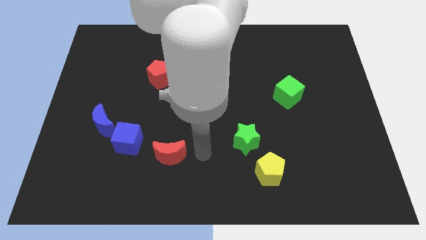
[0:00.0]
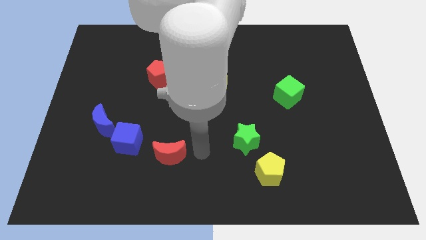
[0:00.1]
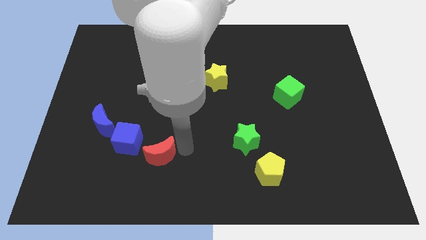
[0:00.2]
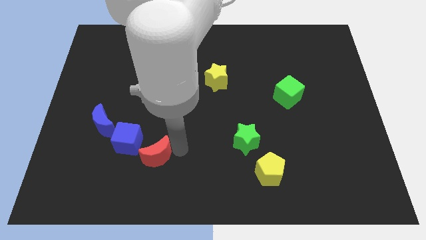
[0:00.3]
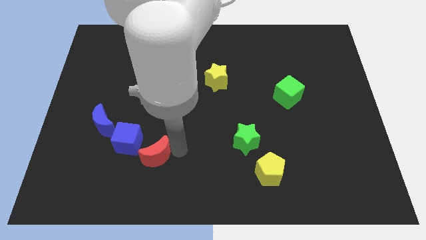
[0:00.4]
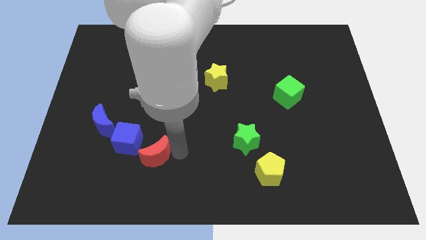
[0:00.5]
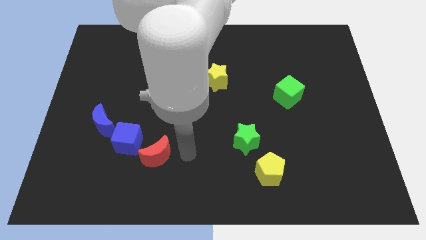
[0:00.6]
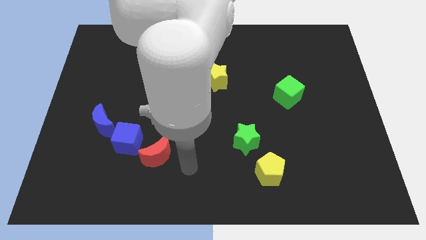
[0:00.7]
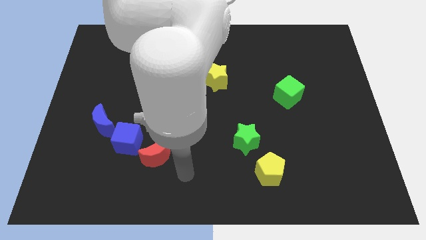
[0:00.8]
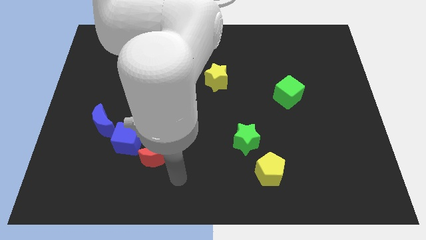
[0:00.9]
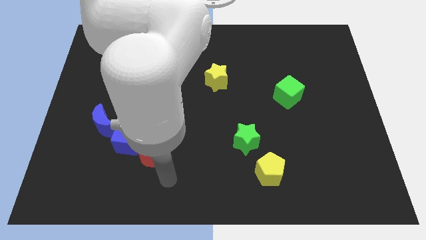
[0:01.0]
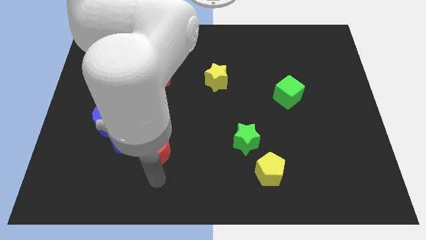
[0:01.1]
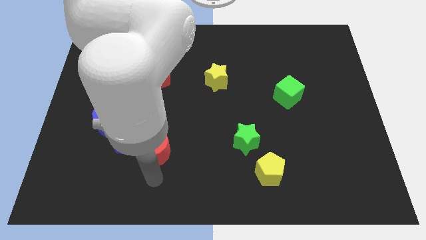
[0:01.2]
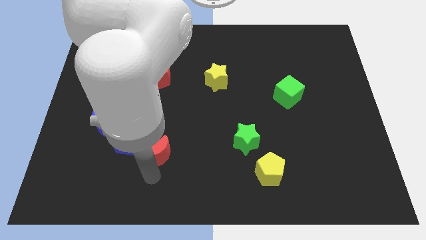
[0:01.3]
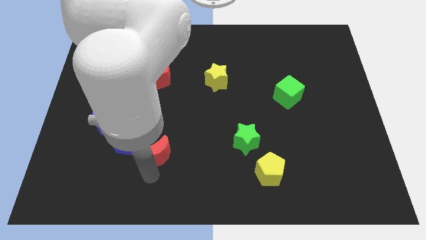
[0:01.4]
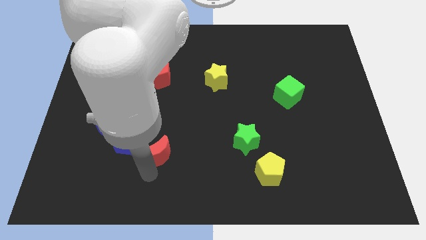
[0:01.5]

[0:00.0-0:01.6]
place the red moon at the bottom right side of blue cube

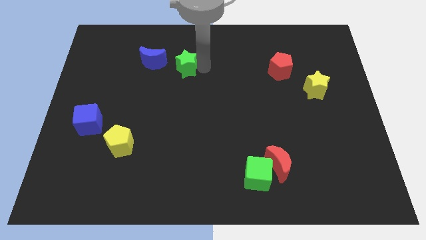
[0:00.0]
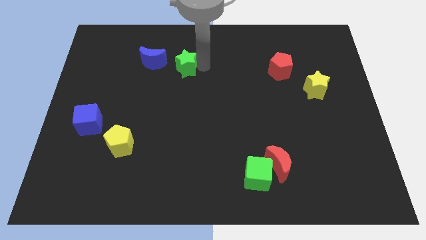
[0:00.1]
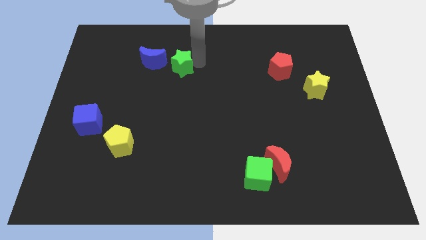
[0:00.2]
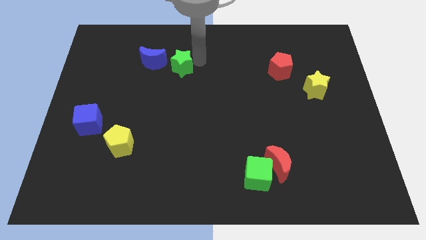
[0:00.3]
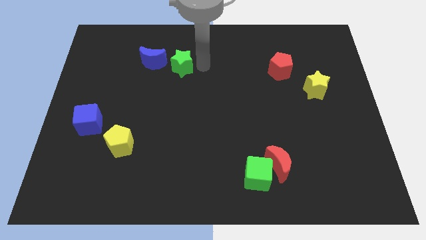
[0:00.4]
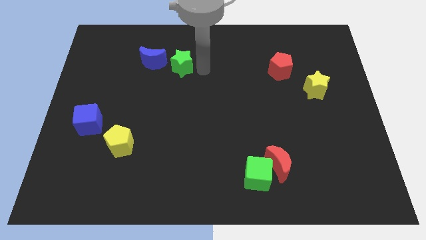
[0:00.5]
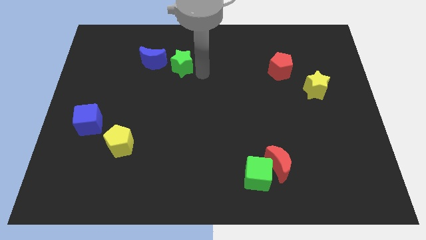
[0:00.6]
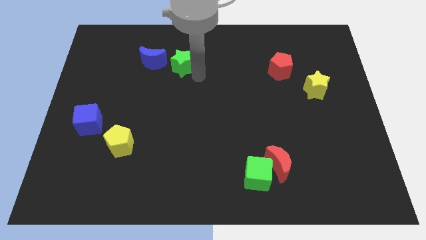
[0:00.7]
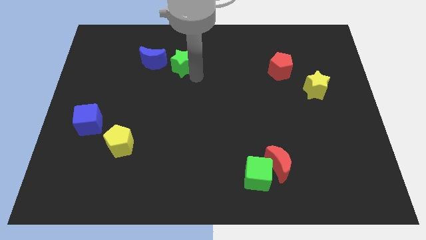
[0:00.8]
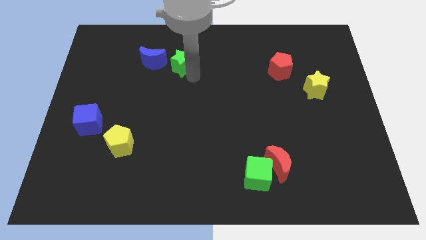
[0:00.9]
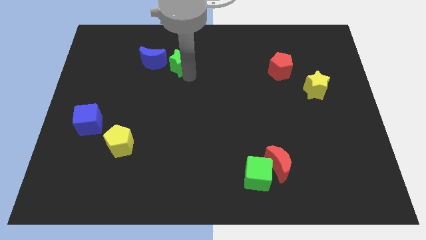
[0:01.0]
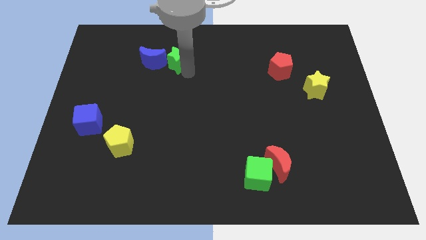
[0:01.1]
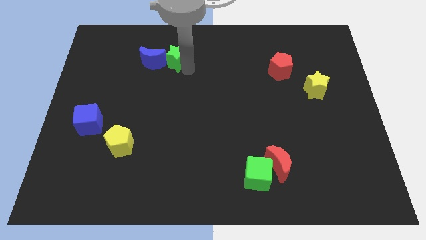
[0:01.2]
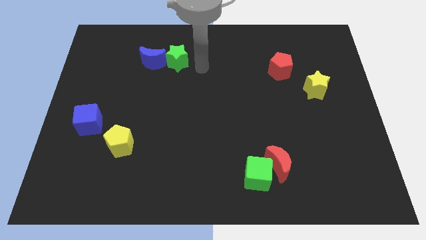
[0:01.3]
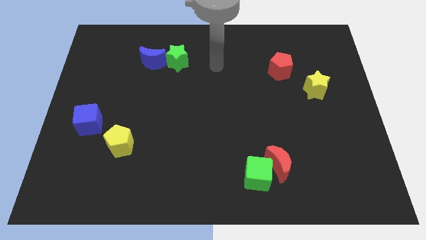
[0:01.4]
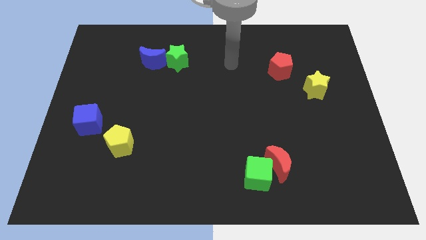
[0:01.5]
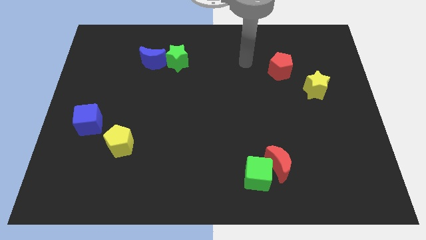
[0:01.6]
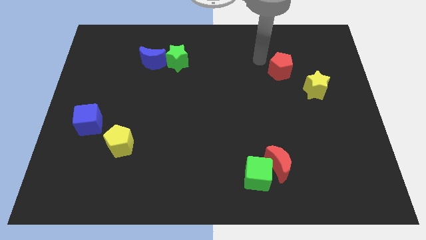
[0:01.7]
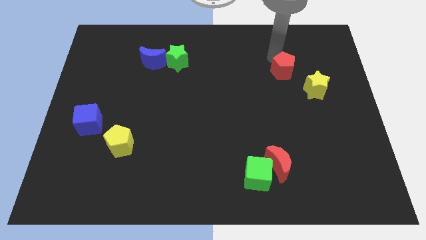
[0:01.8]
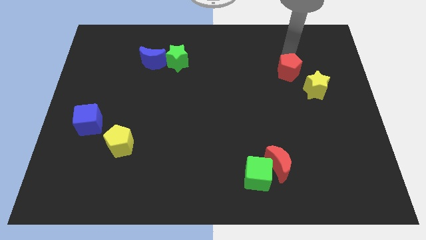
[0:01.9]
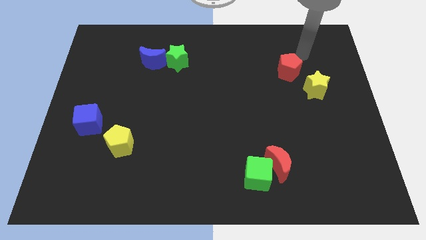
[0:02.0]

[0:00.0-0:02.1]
place the arm towards the top right of the red pentagon

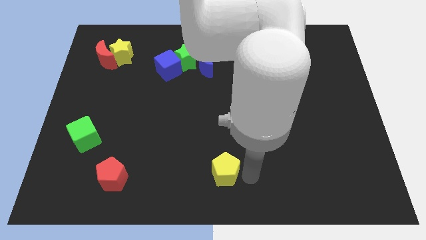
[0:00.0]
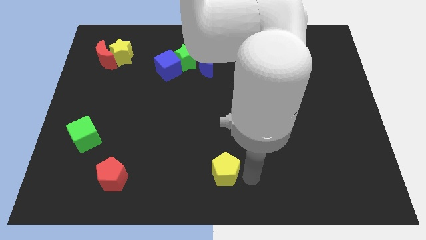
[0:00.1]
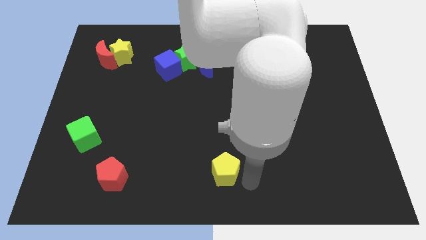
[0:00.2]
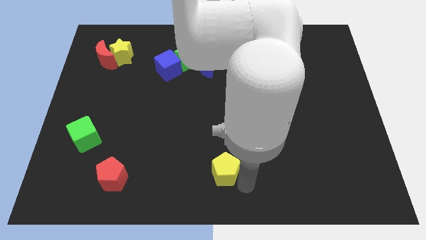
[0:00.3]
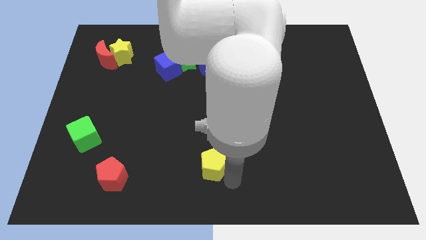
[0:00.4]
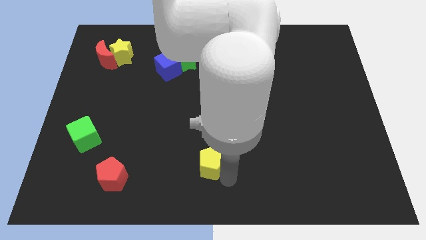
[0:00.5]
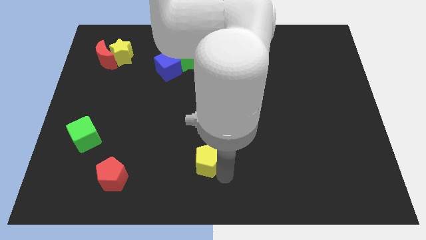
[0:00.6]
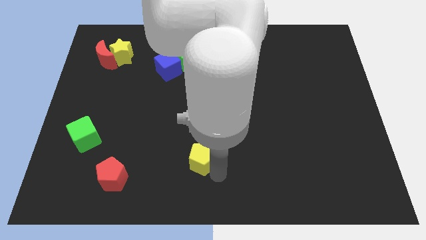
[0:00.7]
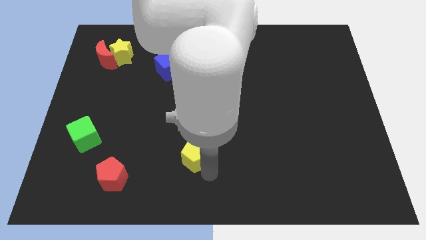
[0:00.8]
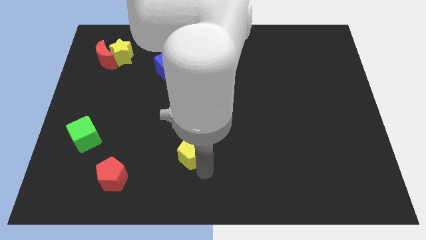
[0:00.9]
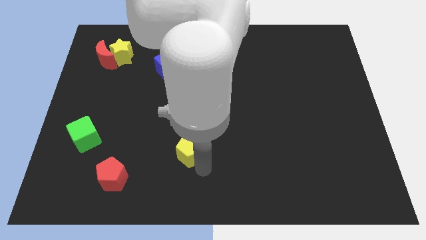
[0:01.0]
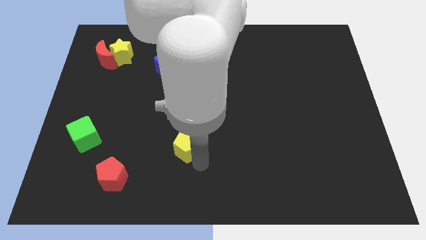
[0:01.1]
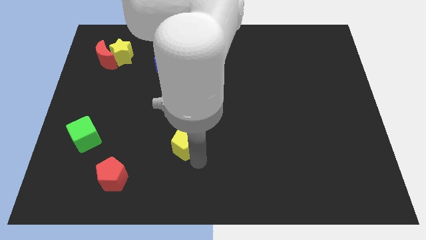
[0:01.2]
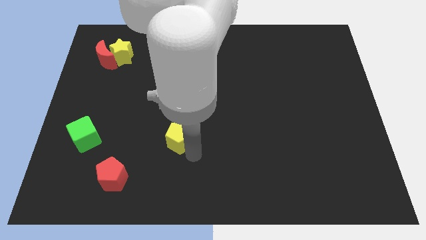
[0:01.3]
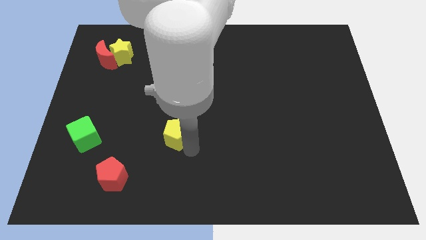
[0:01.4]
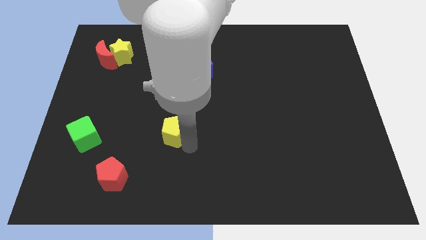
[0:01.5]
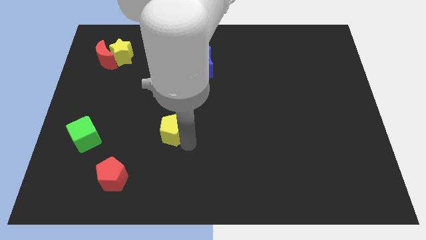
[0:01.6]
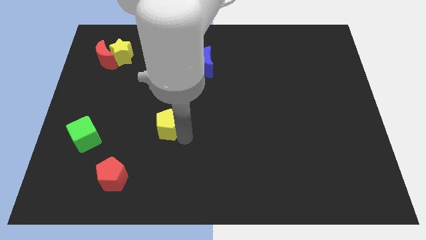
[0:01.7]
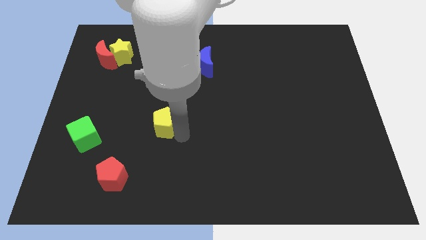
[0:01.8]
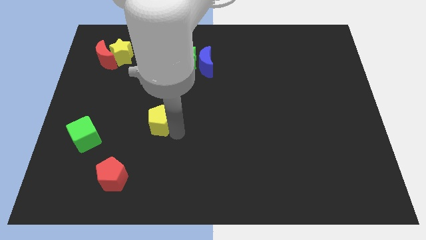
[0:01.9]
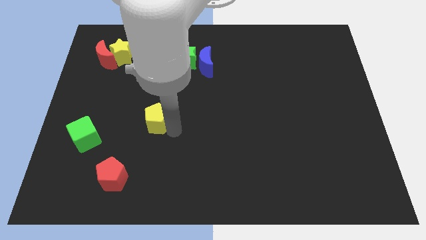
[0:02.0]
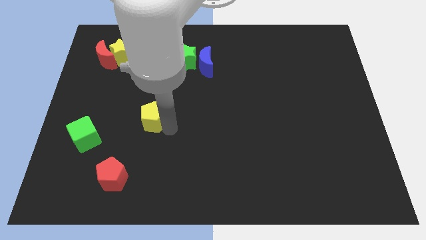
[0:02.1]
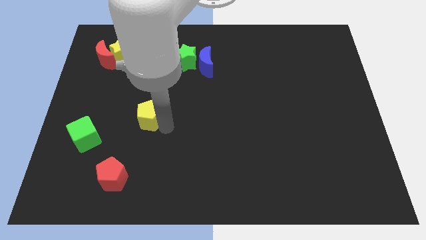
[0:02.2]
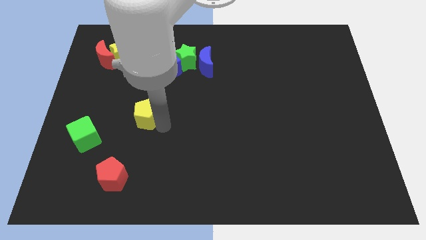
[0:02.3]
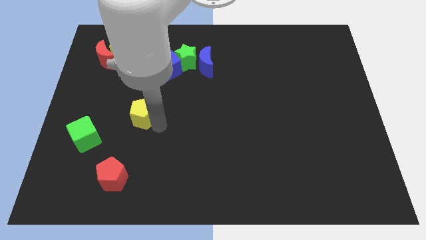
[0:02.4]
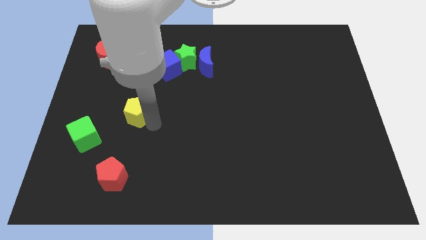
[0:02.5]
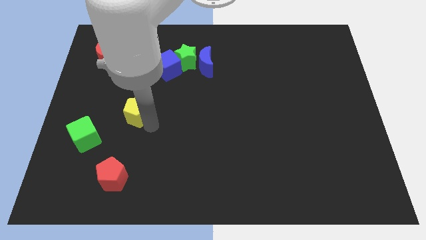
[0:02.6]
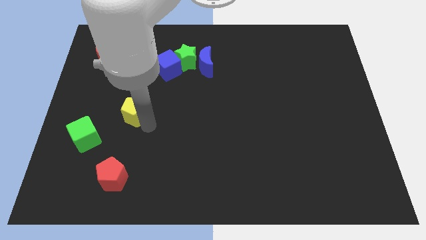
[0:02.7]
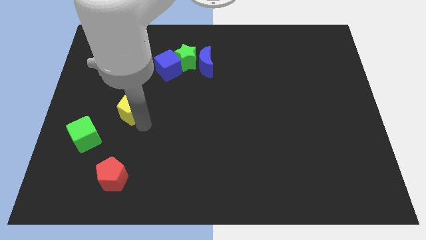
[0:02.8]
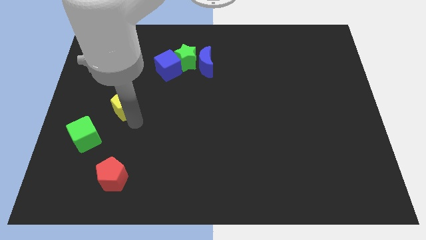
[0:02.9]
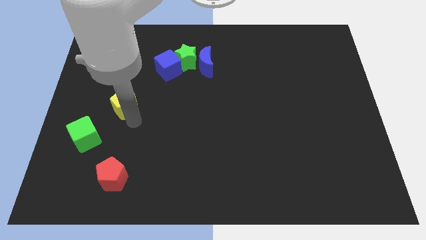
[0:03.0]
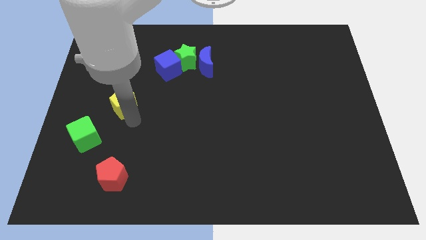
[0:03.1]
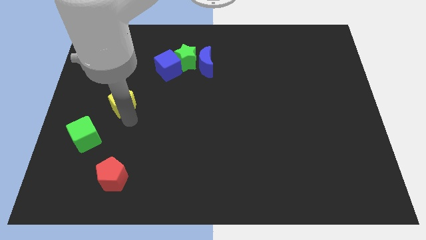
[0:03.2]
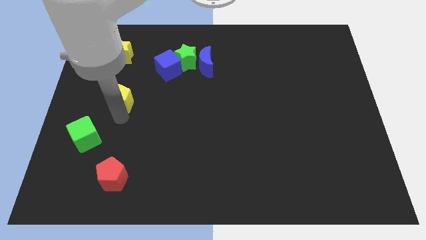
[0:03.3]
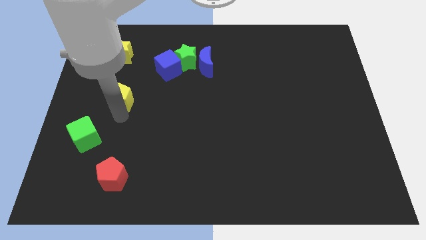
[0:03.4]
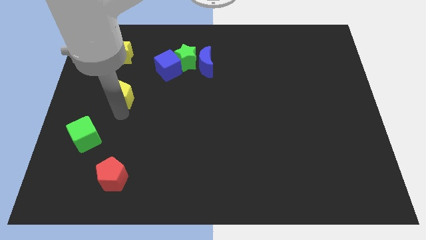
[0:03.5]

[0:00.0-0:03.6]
place the yellow pentagon above the red pentagon

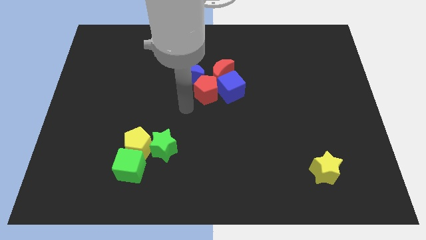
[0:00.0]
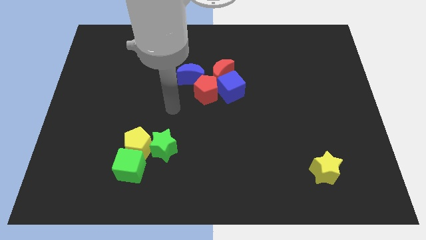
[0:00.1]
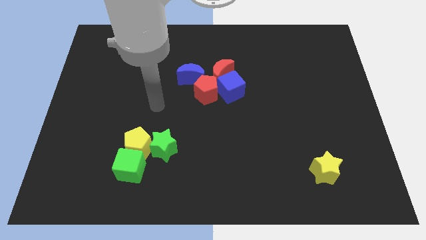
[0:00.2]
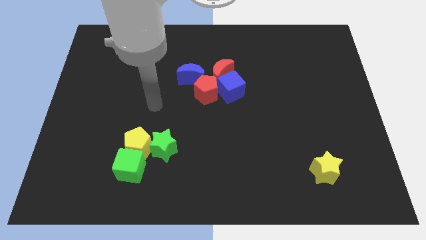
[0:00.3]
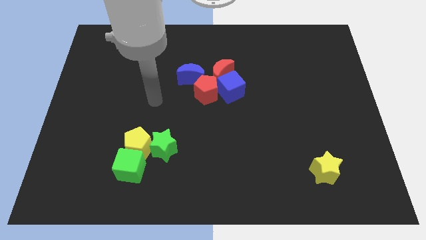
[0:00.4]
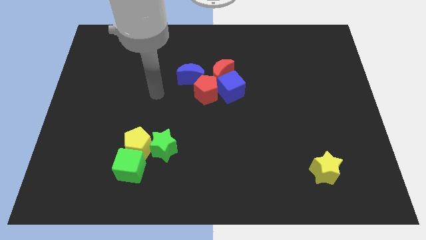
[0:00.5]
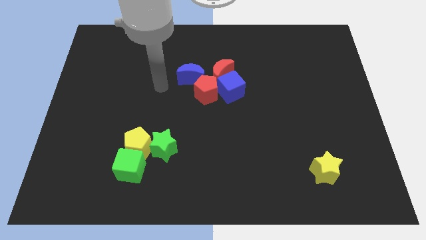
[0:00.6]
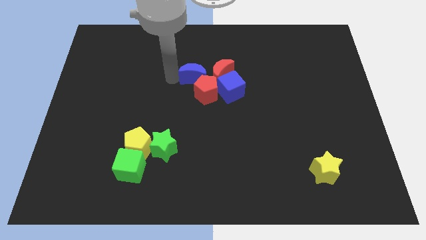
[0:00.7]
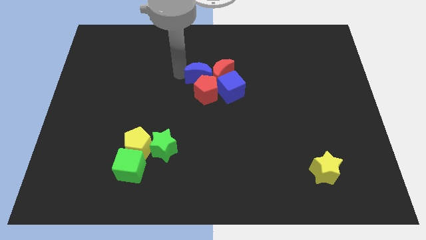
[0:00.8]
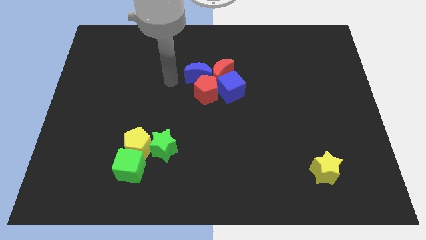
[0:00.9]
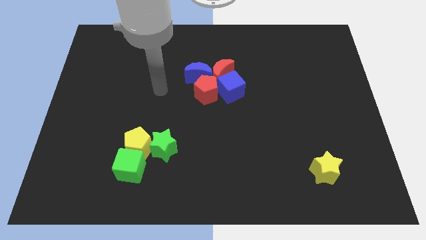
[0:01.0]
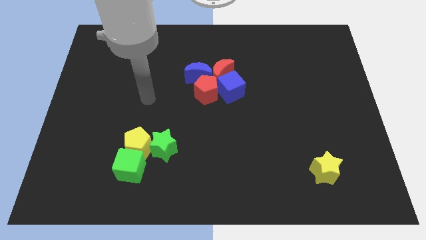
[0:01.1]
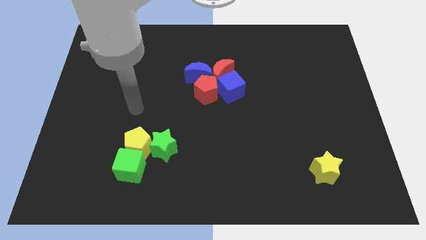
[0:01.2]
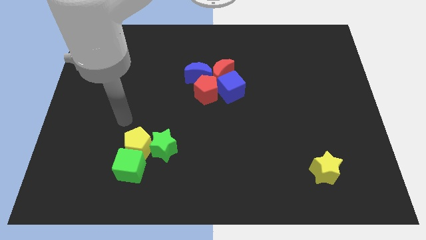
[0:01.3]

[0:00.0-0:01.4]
push the blue crescent into red blocks
